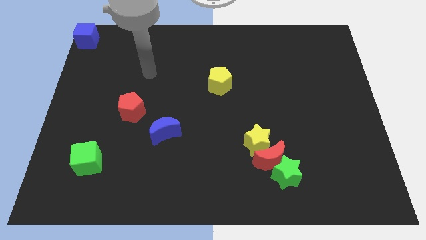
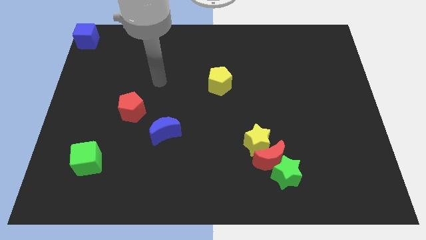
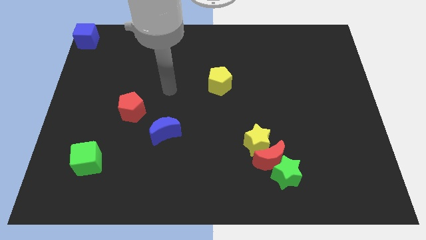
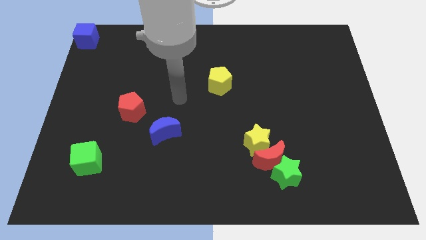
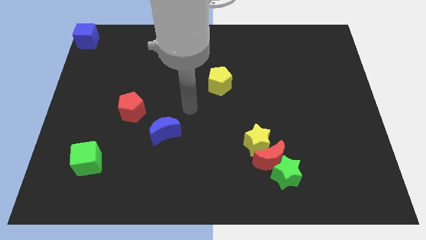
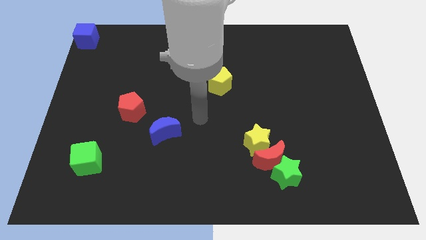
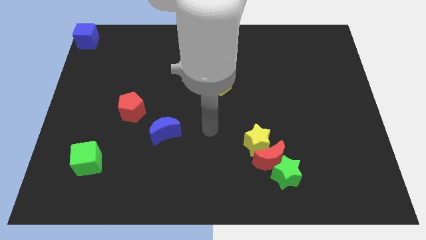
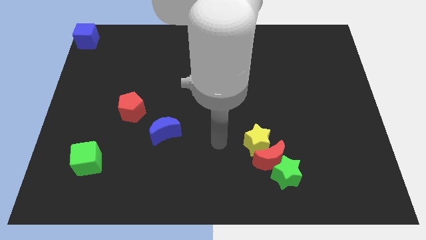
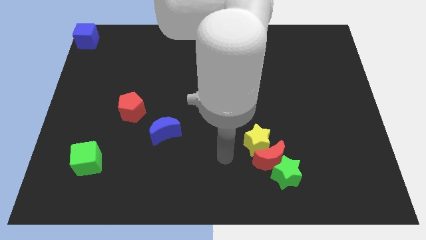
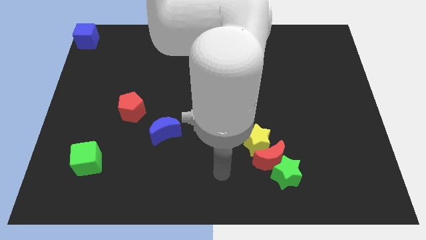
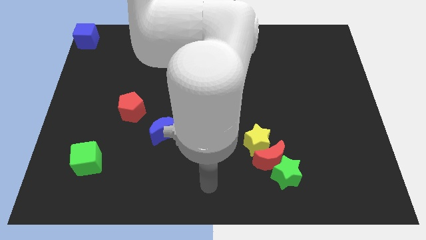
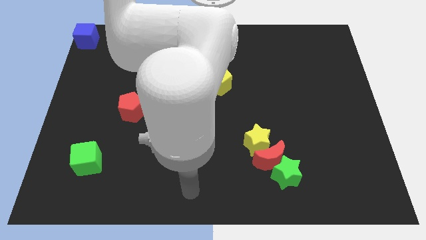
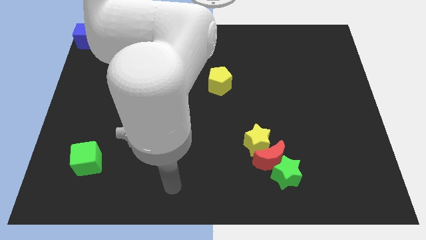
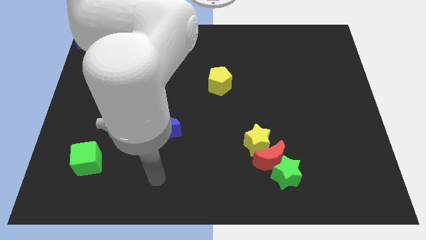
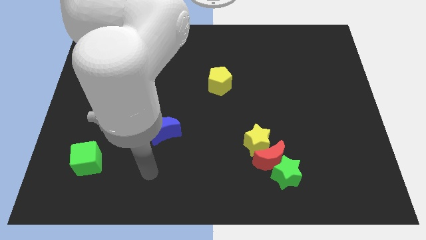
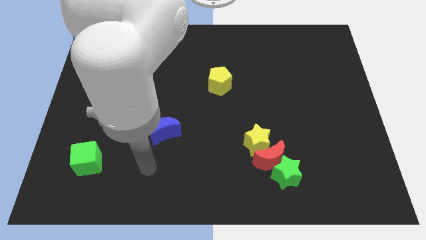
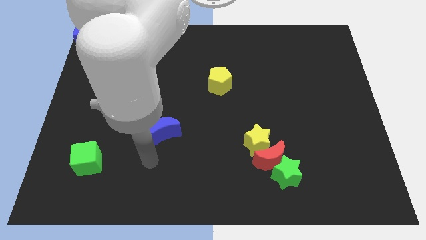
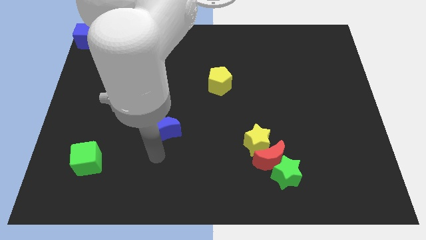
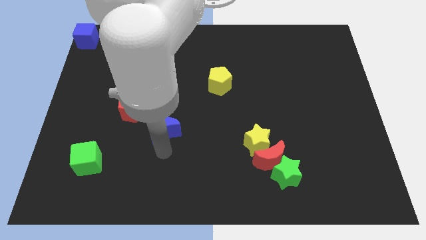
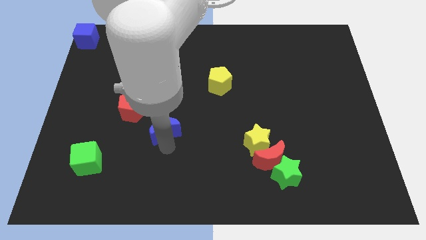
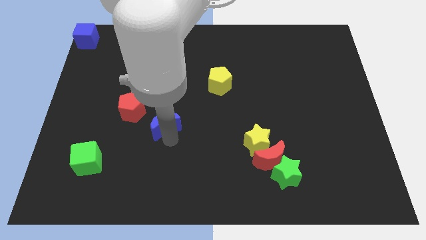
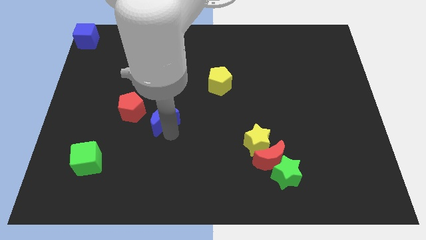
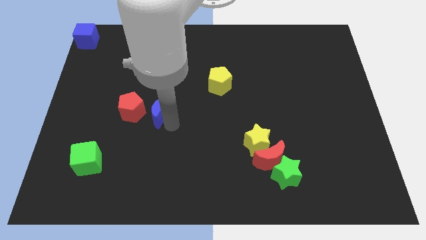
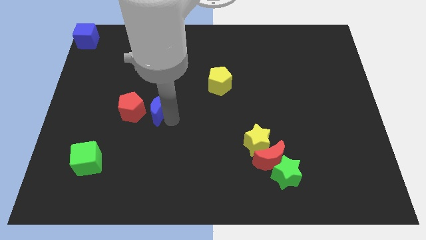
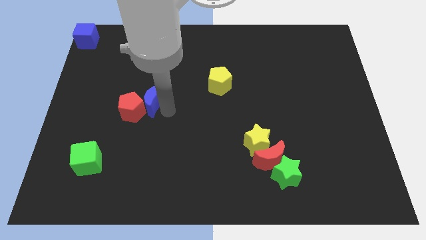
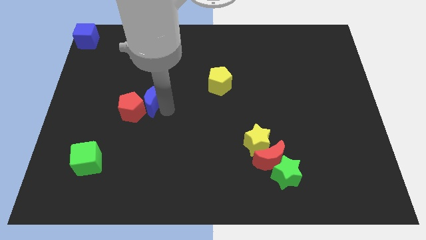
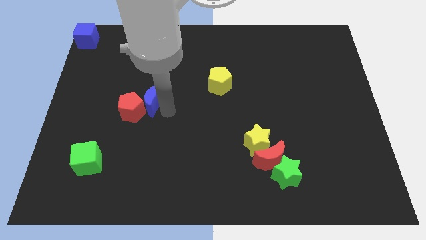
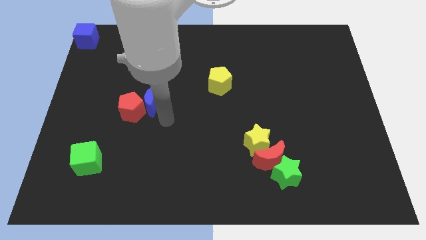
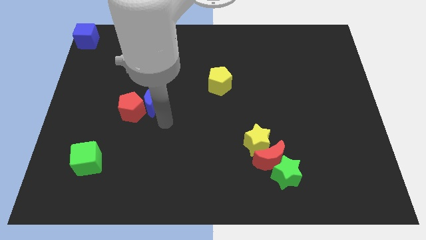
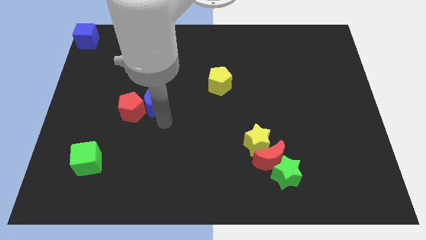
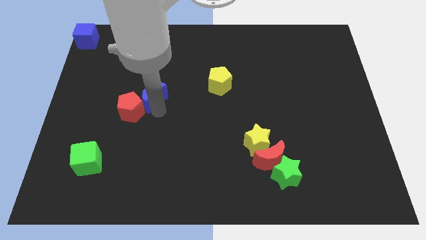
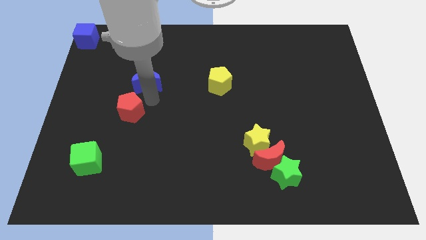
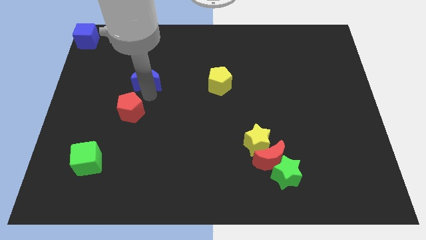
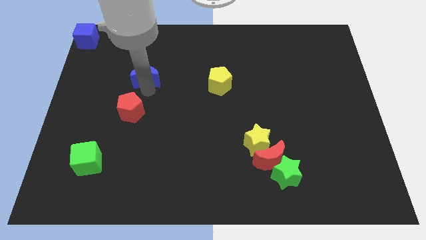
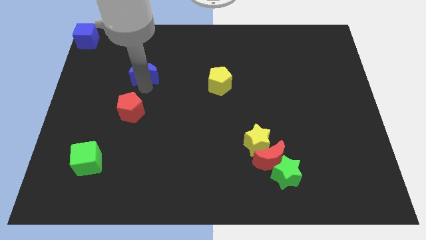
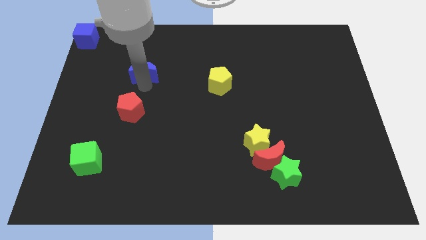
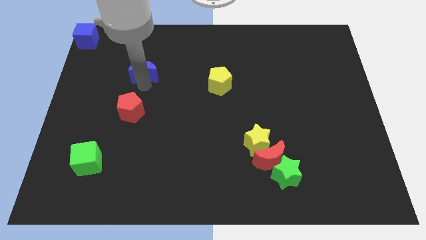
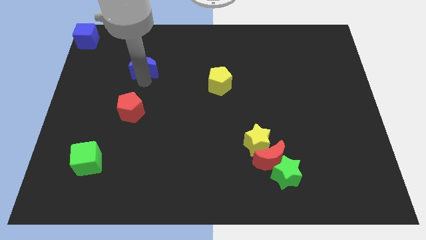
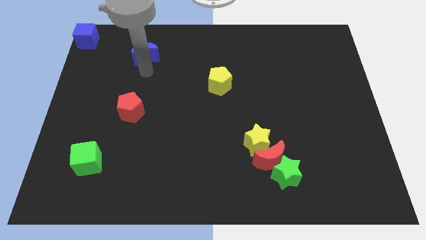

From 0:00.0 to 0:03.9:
slide the blue moon diagonally top left to the yellow pentagon

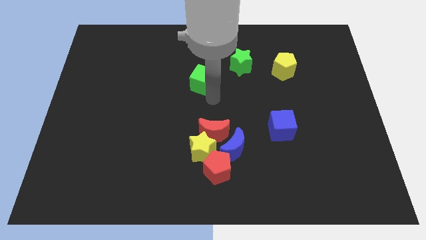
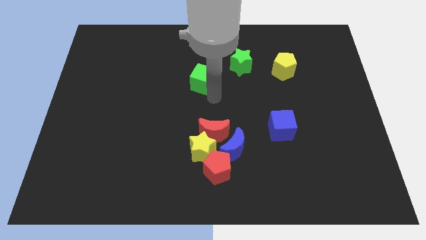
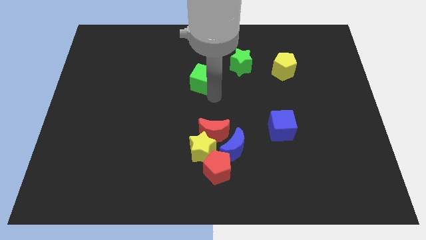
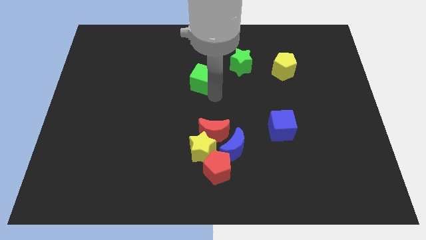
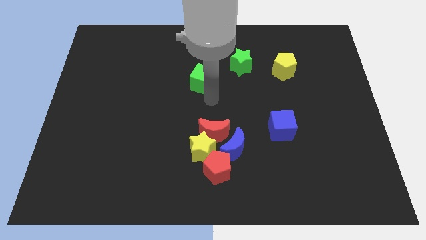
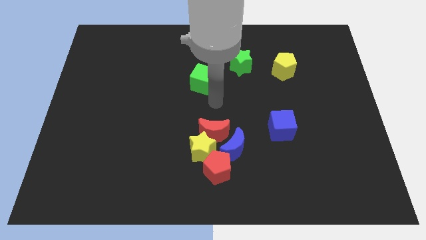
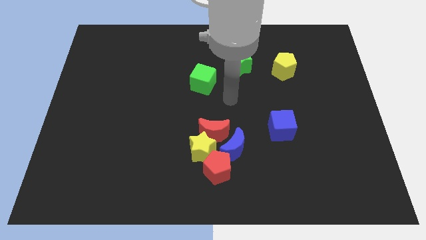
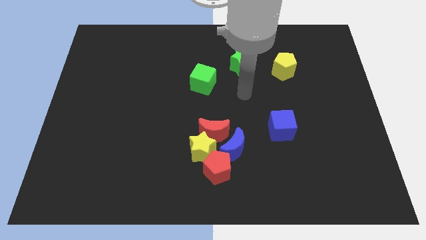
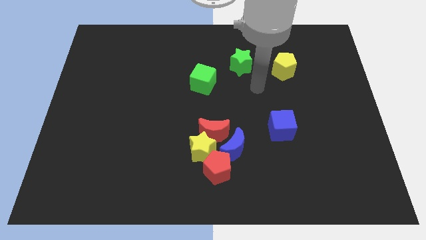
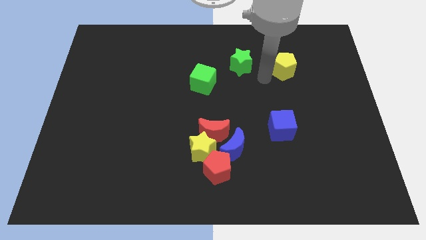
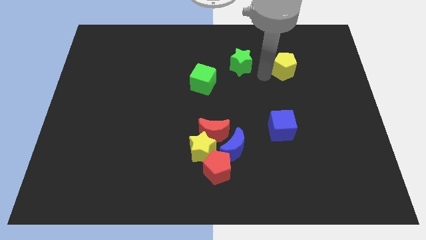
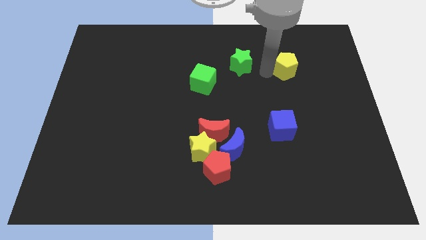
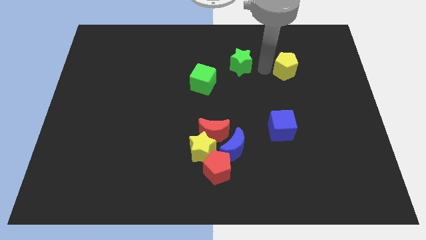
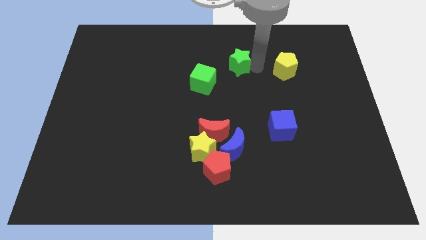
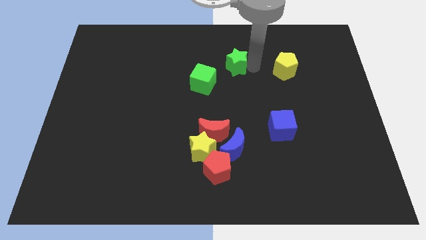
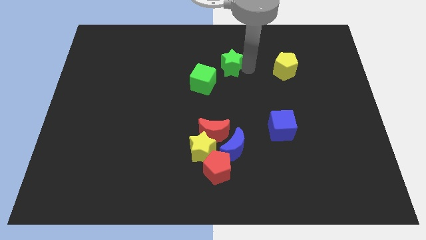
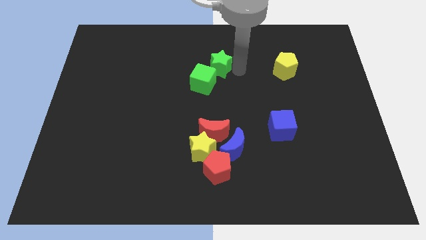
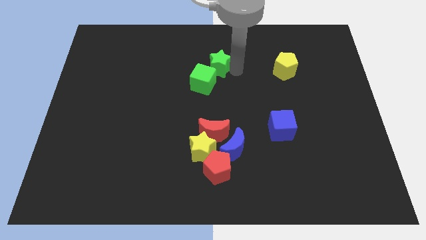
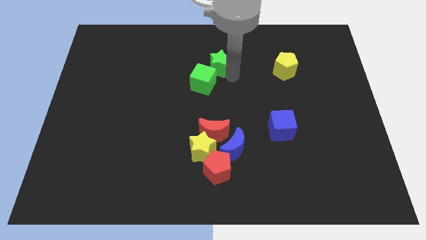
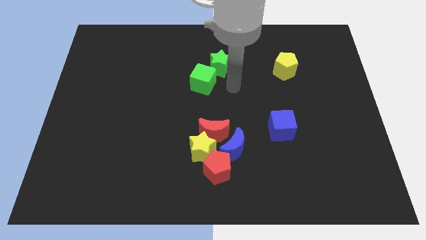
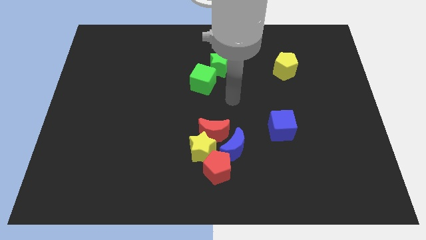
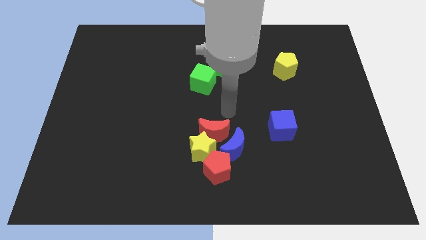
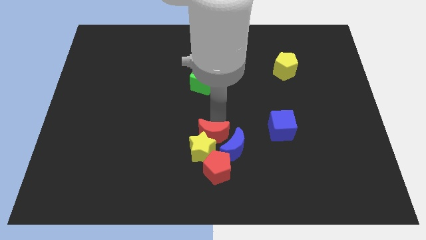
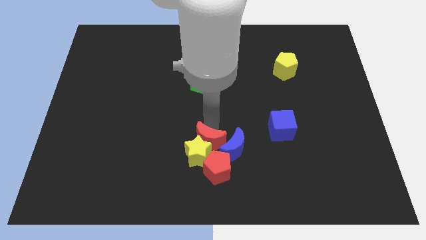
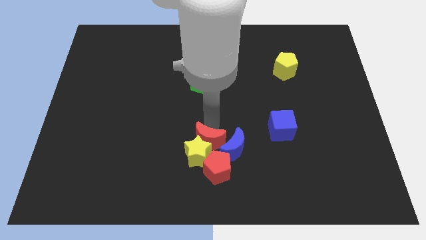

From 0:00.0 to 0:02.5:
push the green star into the green cube

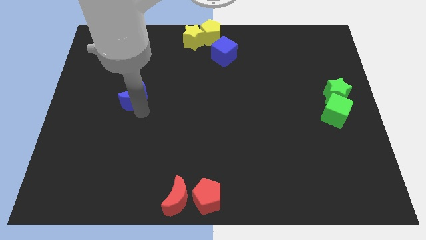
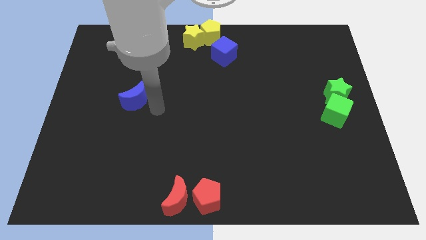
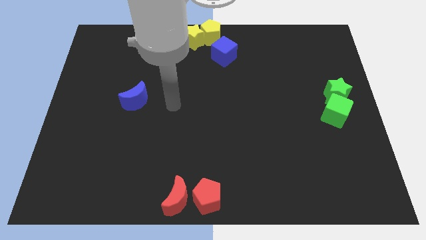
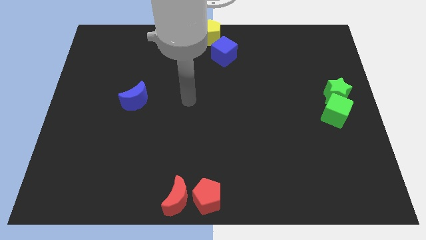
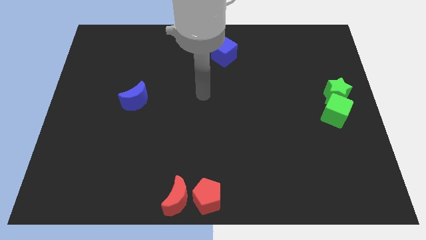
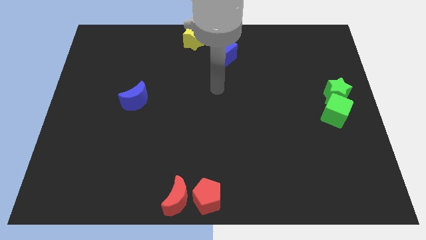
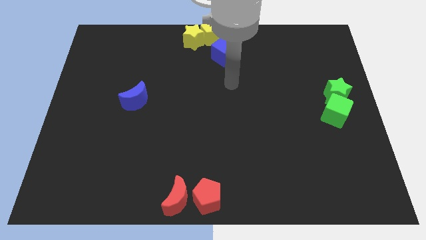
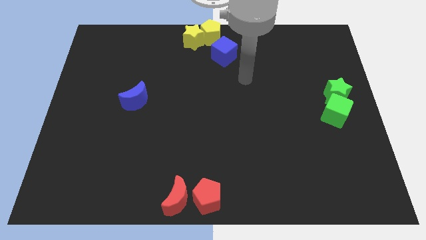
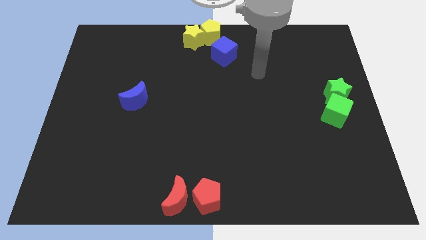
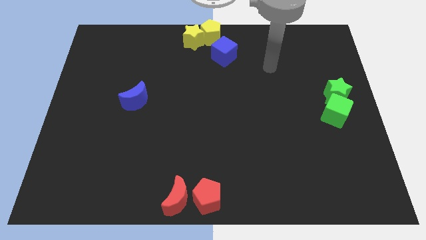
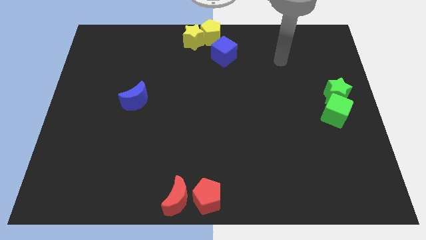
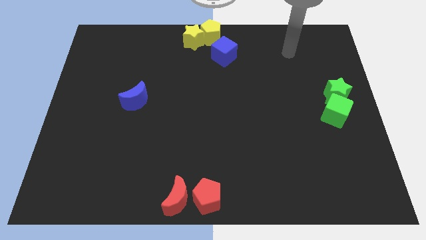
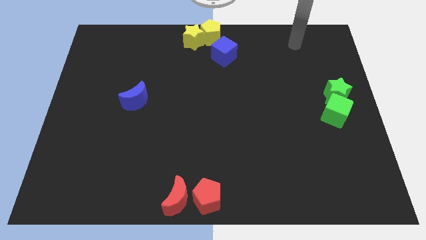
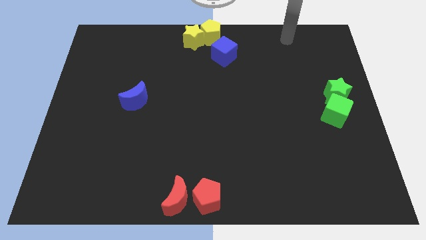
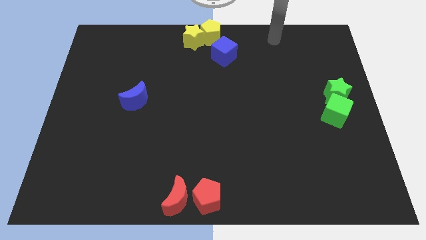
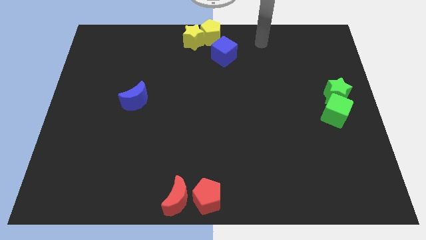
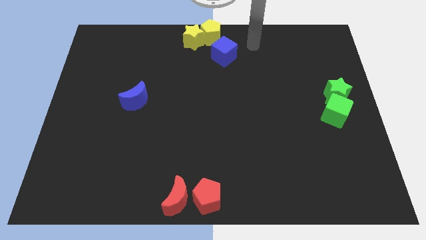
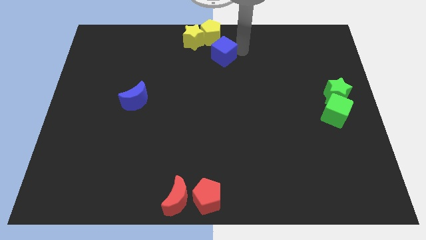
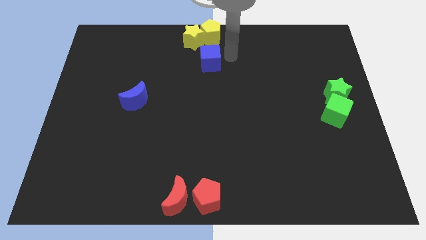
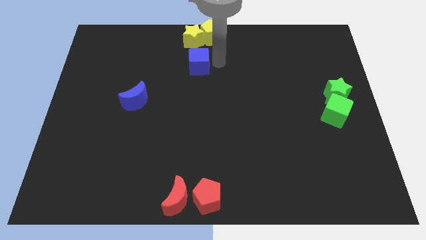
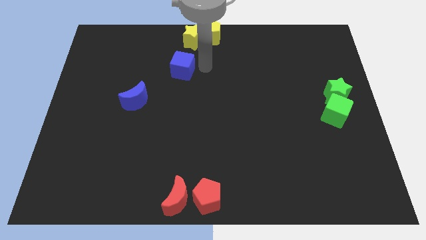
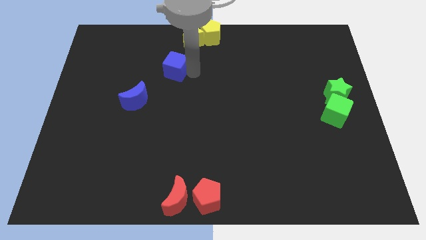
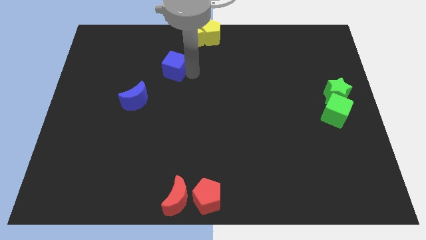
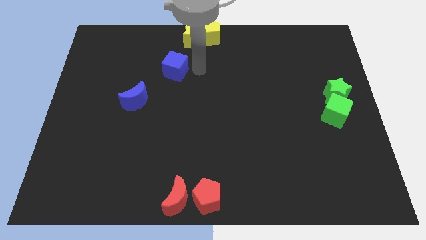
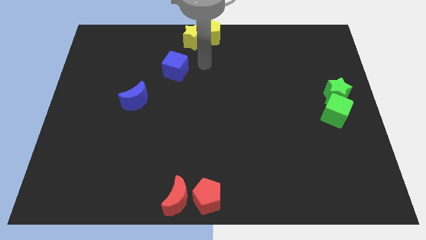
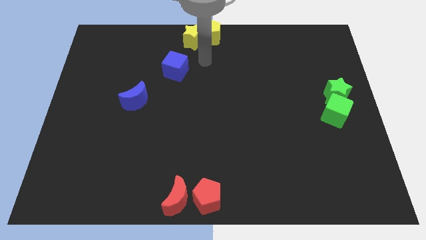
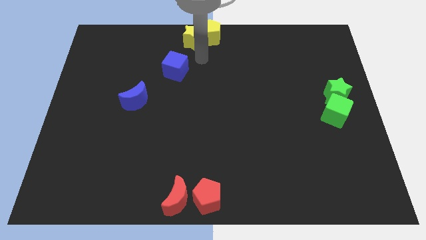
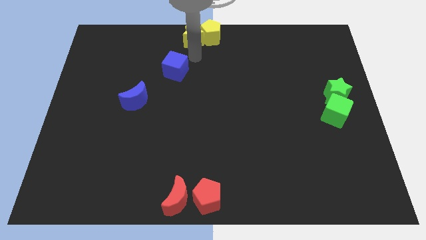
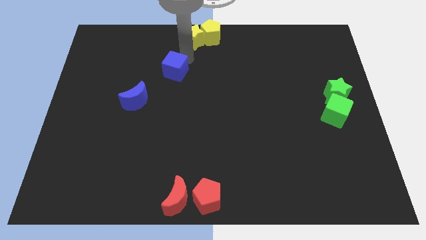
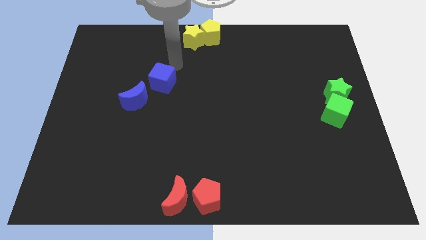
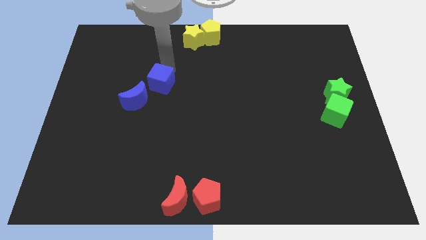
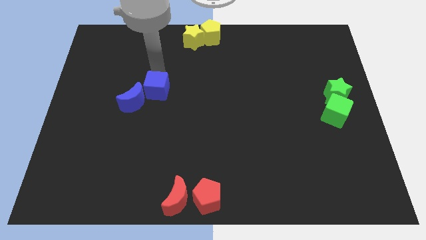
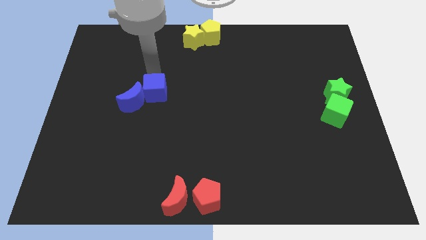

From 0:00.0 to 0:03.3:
push the blue cube close to blue moon
